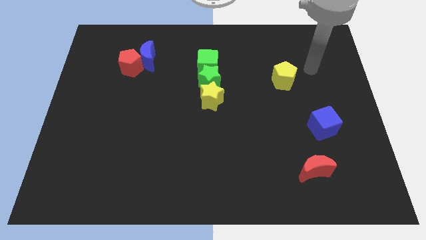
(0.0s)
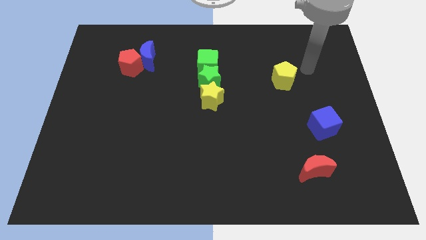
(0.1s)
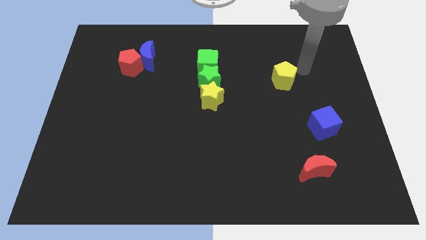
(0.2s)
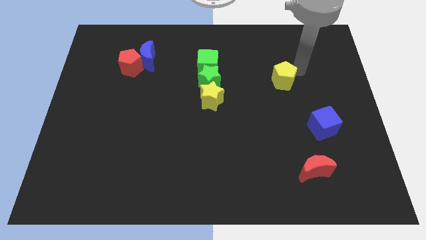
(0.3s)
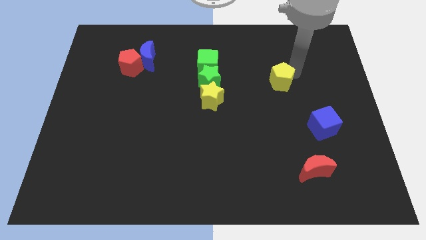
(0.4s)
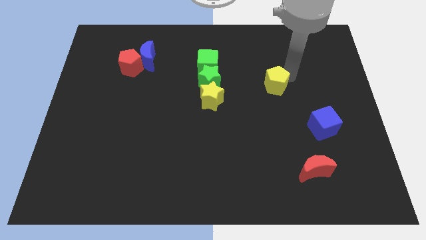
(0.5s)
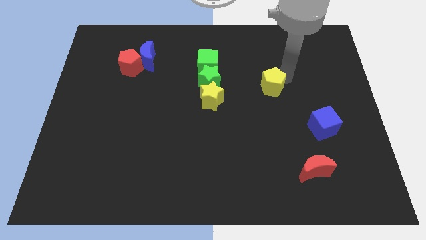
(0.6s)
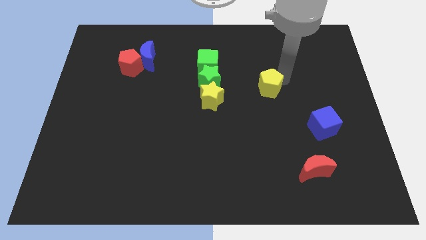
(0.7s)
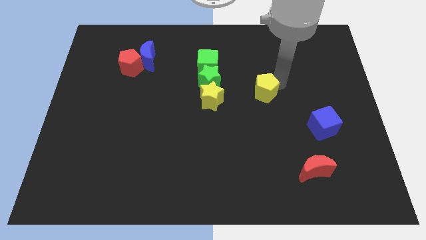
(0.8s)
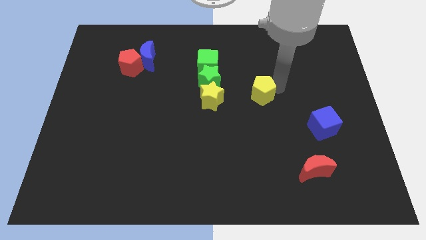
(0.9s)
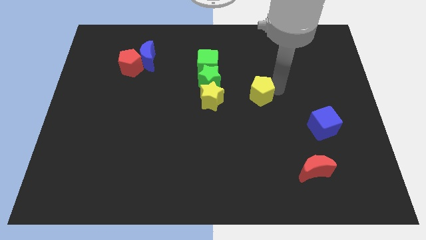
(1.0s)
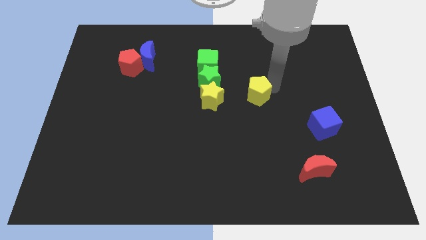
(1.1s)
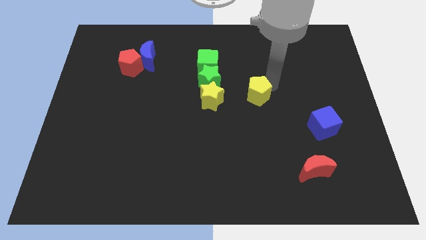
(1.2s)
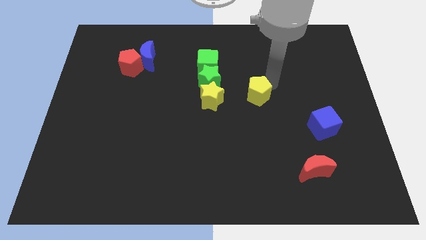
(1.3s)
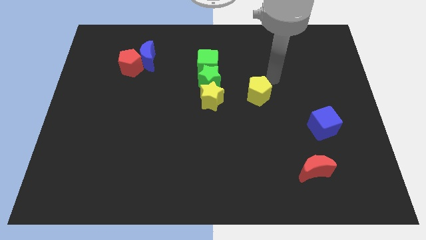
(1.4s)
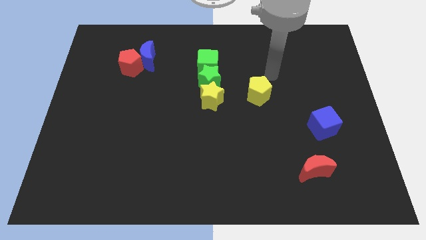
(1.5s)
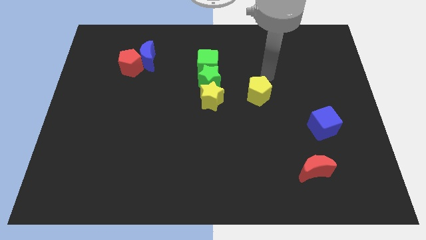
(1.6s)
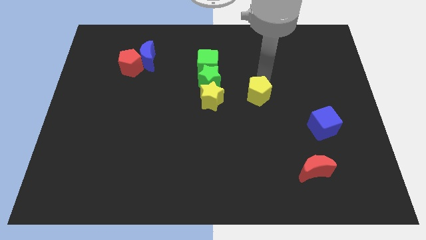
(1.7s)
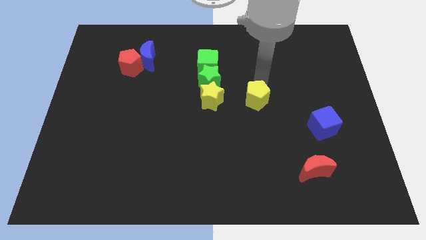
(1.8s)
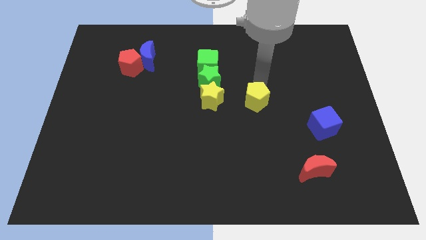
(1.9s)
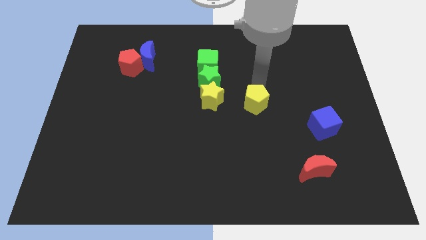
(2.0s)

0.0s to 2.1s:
make the yellow pentagon to the bottom right of the star

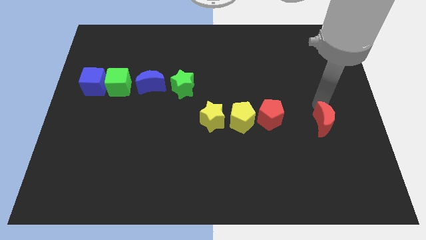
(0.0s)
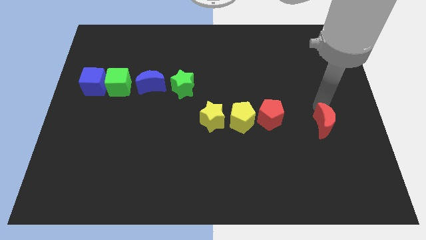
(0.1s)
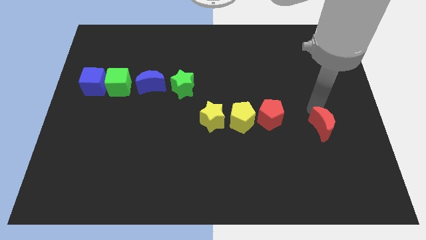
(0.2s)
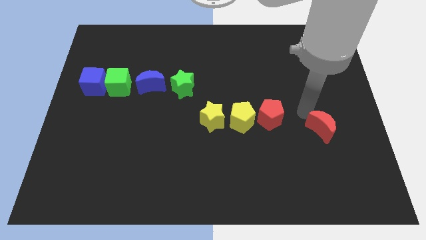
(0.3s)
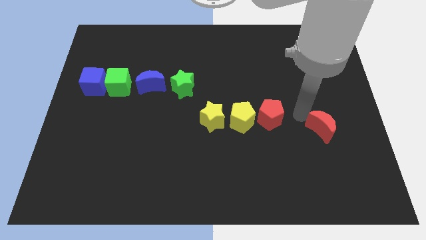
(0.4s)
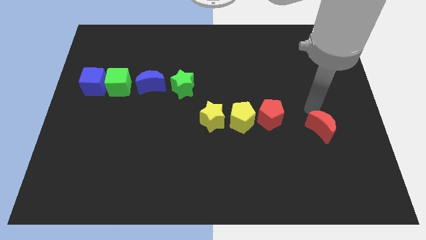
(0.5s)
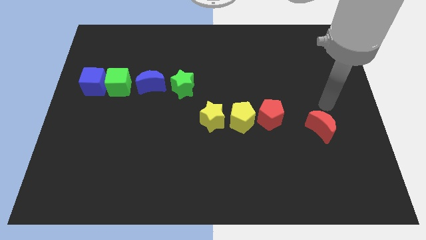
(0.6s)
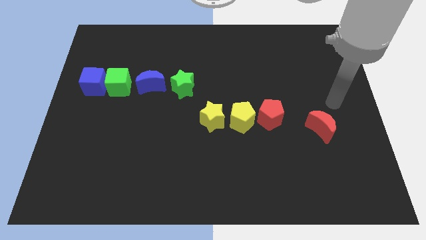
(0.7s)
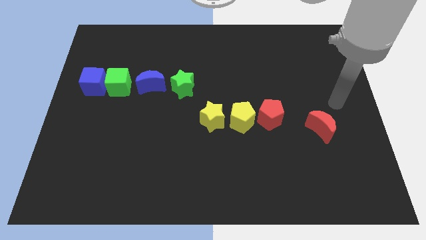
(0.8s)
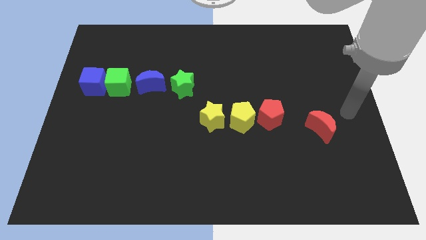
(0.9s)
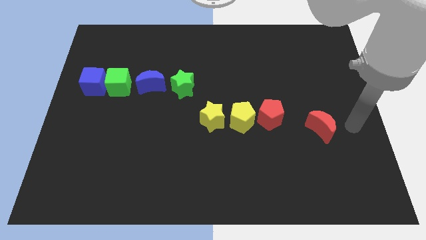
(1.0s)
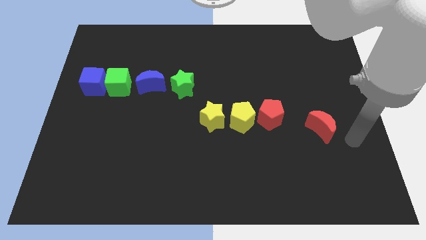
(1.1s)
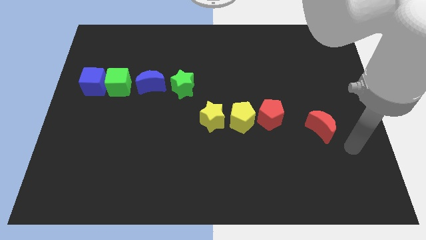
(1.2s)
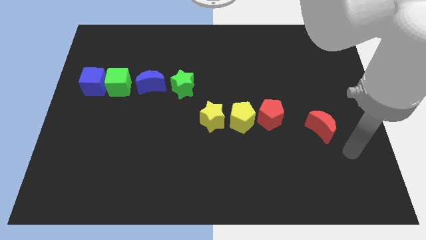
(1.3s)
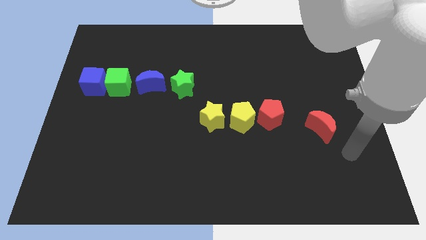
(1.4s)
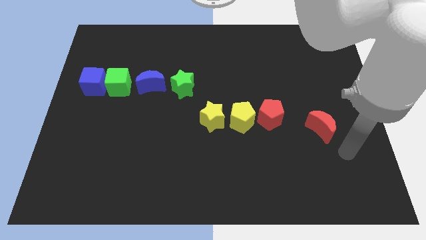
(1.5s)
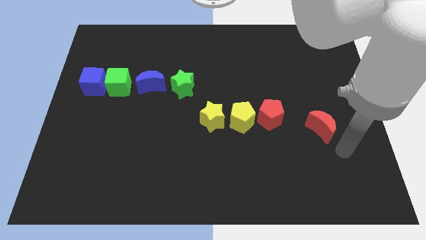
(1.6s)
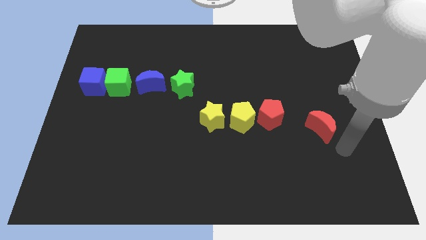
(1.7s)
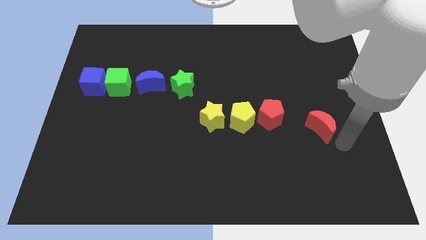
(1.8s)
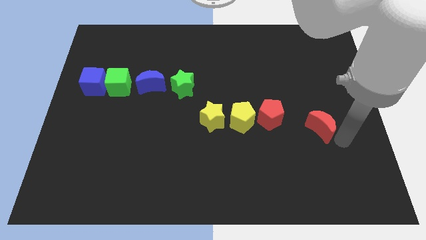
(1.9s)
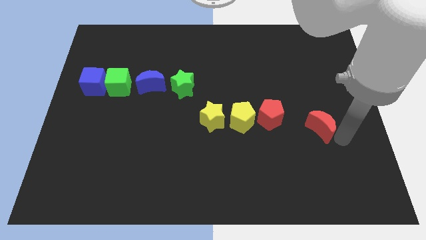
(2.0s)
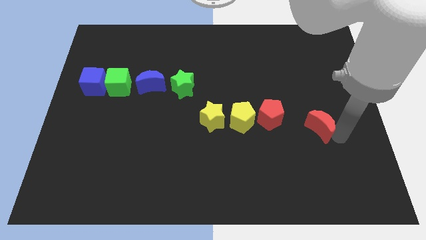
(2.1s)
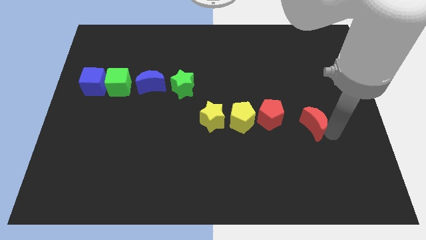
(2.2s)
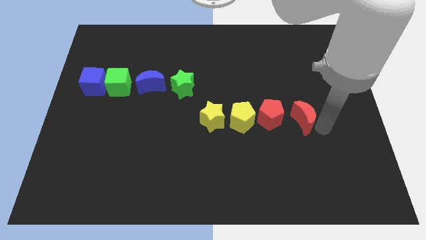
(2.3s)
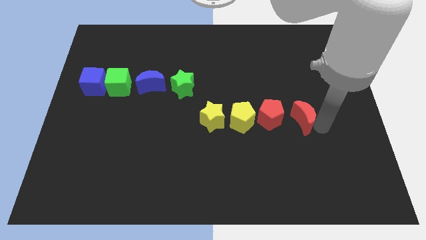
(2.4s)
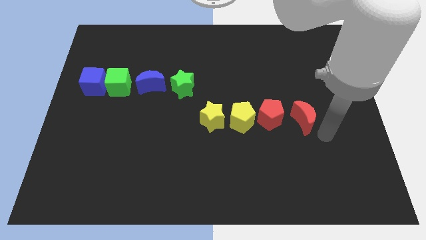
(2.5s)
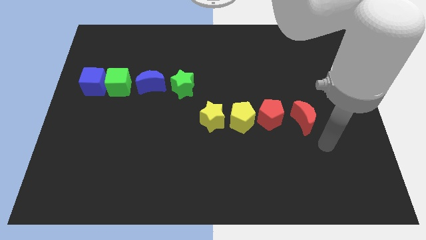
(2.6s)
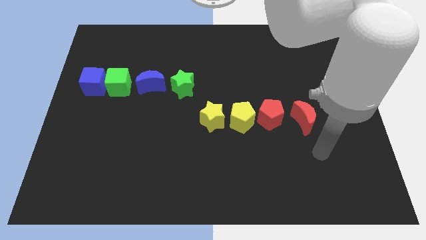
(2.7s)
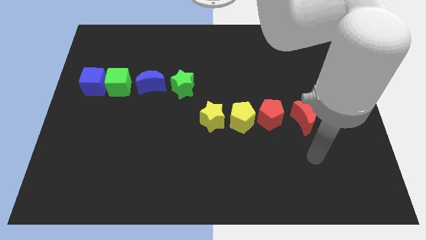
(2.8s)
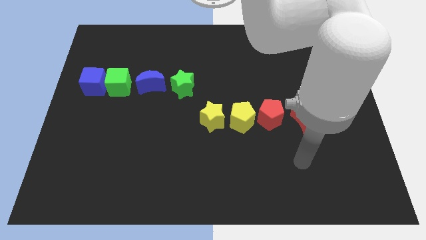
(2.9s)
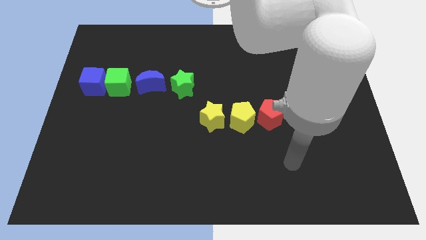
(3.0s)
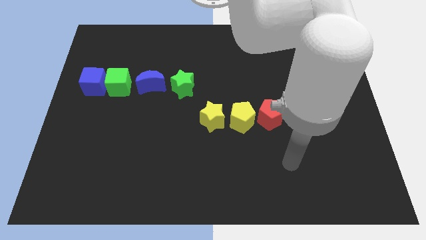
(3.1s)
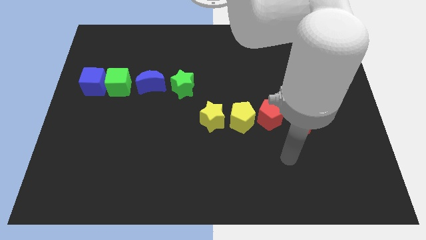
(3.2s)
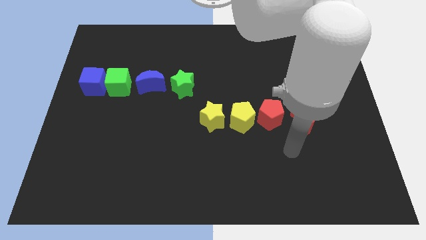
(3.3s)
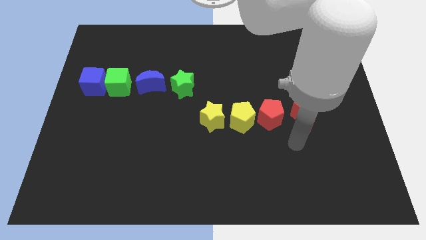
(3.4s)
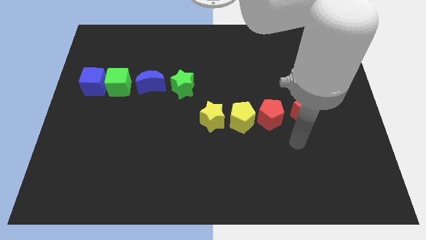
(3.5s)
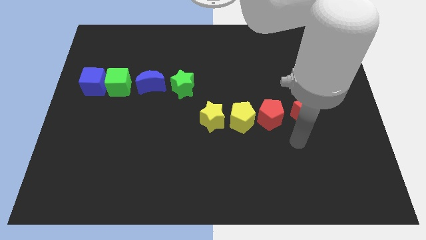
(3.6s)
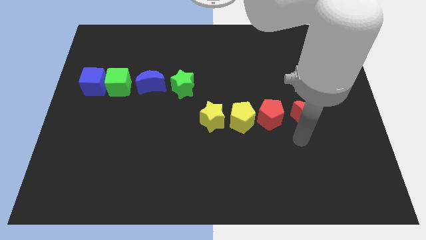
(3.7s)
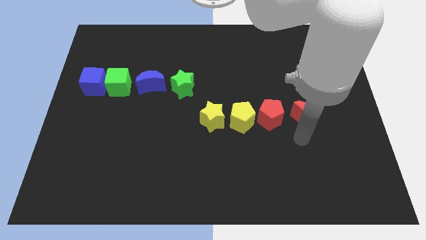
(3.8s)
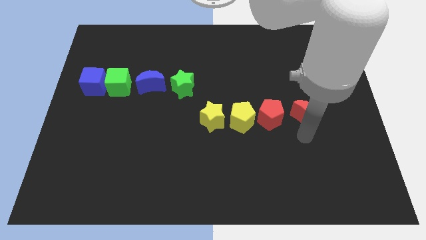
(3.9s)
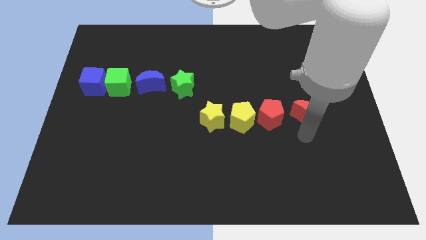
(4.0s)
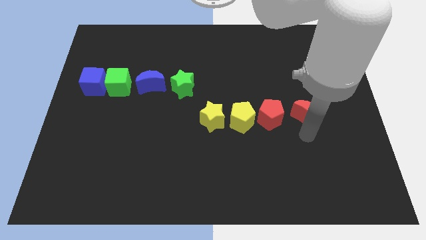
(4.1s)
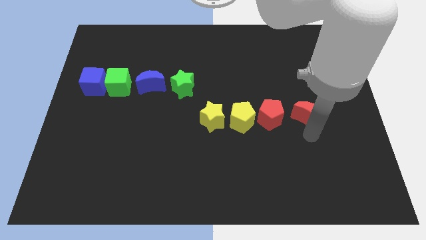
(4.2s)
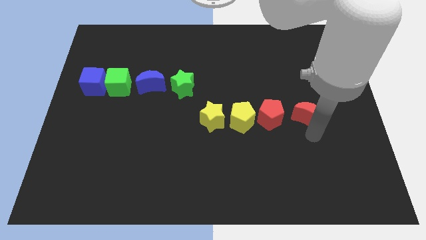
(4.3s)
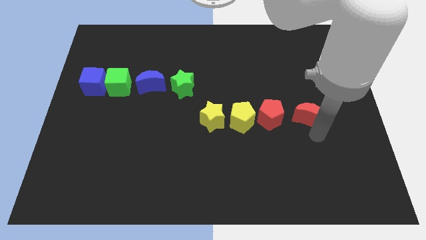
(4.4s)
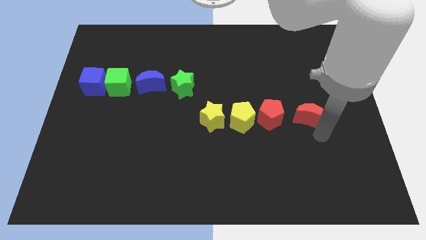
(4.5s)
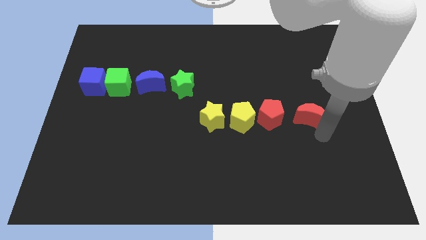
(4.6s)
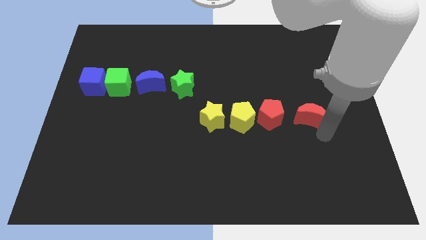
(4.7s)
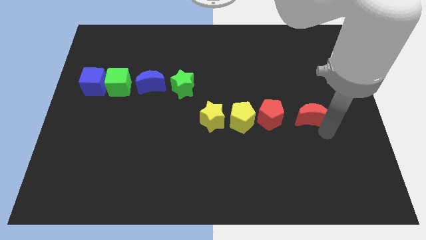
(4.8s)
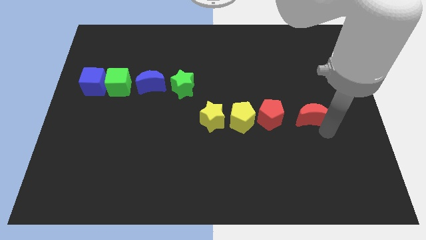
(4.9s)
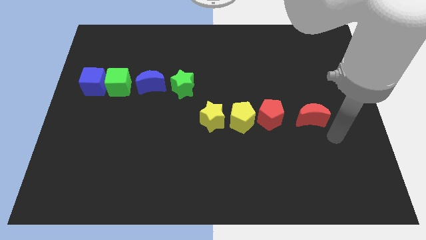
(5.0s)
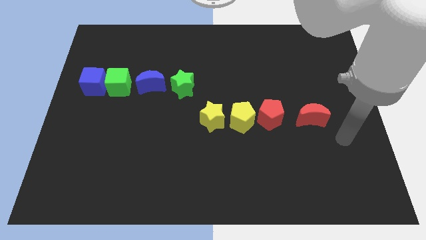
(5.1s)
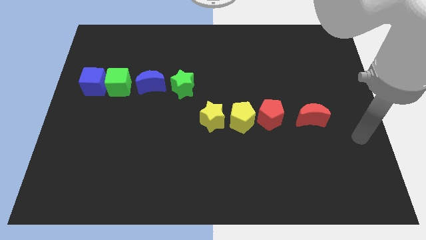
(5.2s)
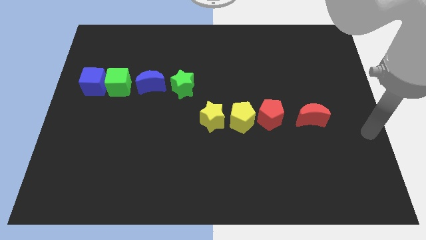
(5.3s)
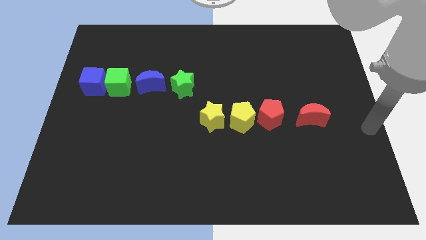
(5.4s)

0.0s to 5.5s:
move the red crescent to the right beside the red pentagon

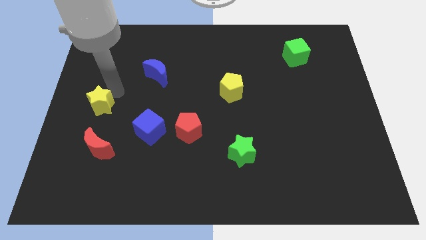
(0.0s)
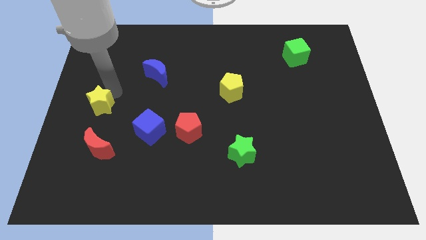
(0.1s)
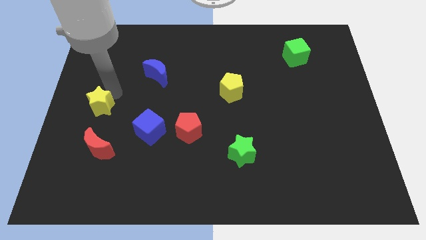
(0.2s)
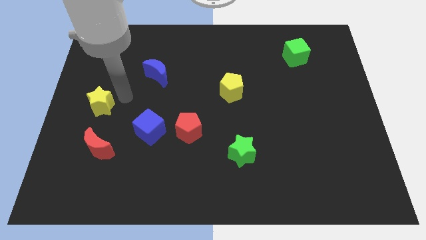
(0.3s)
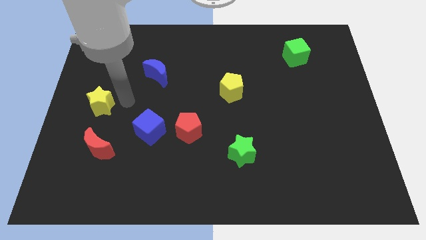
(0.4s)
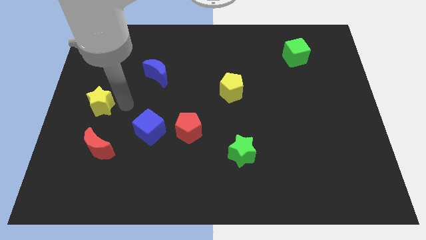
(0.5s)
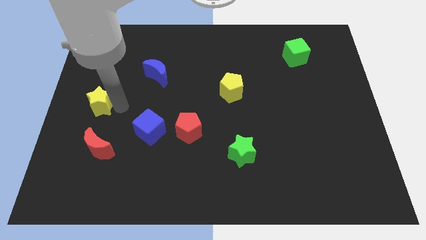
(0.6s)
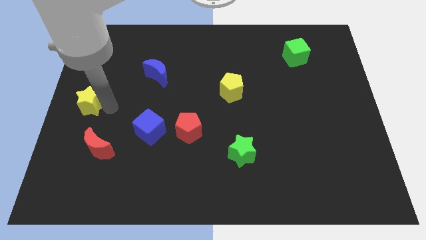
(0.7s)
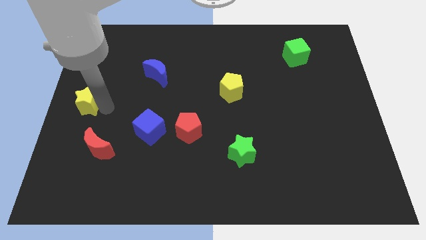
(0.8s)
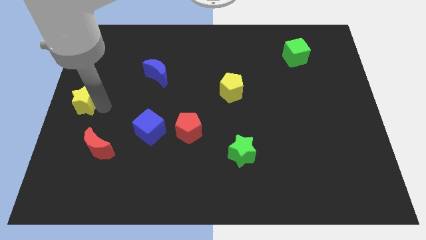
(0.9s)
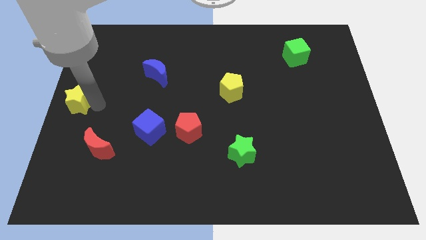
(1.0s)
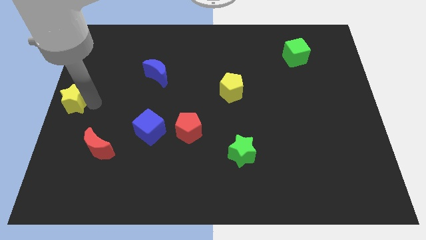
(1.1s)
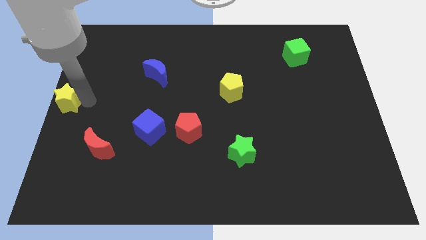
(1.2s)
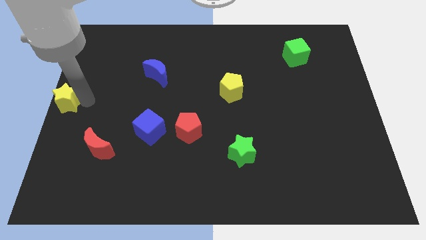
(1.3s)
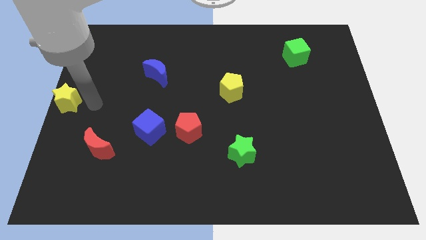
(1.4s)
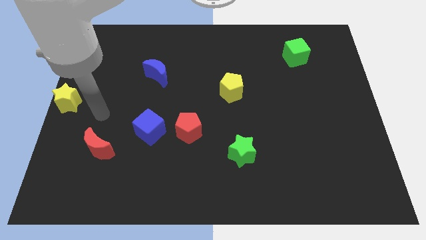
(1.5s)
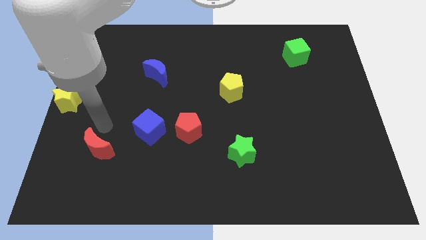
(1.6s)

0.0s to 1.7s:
push the yellow star towards the center left corner of the board
